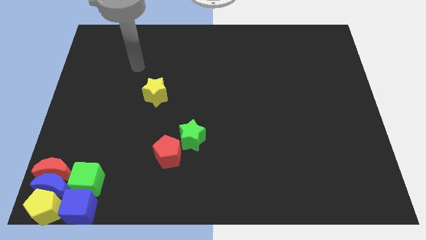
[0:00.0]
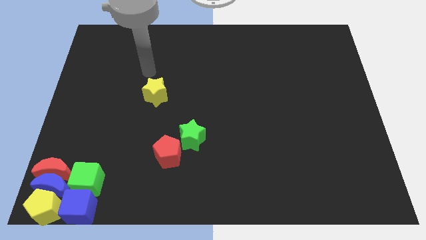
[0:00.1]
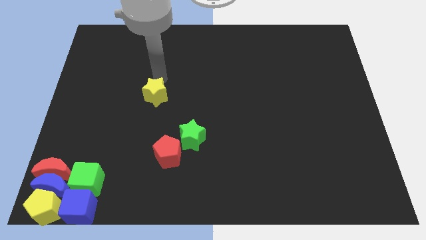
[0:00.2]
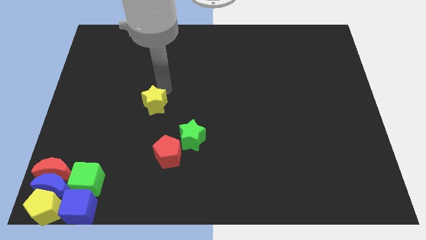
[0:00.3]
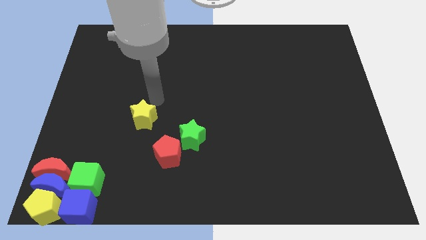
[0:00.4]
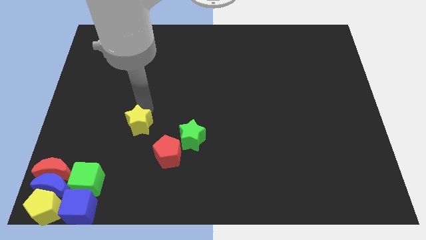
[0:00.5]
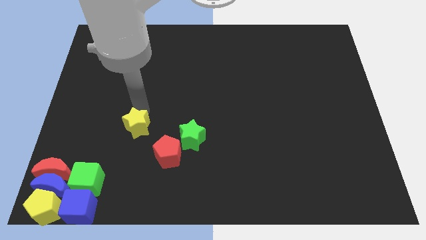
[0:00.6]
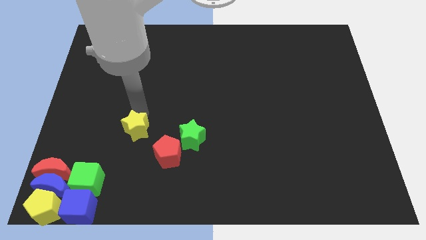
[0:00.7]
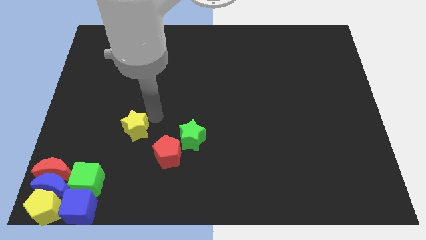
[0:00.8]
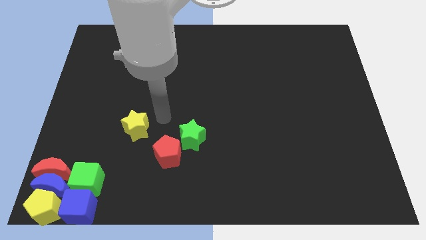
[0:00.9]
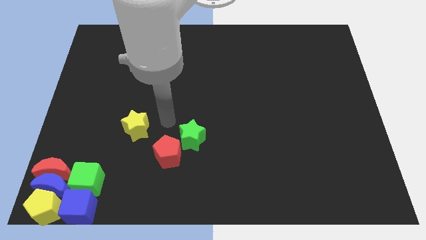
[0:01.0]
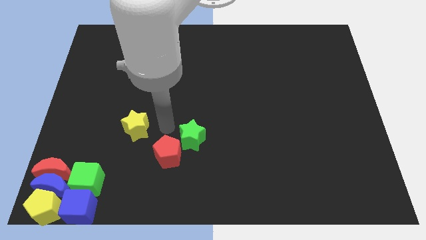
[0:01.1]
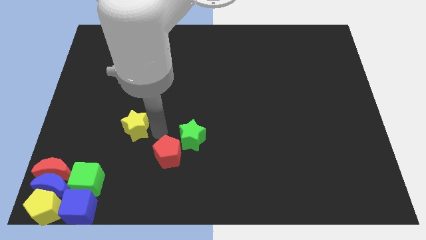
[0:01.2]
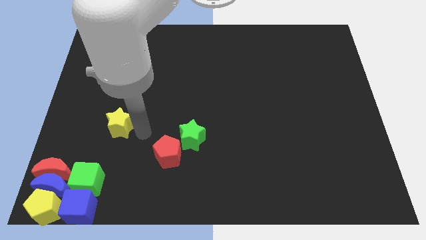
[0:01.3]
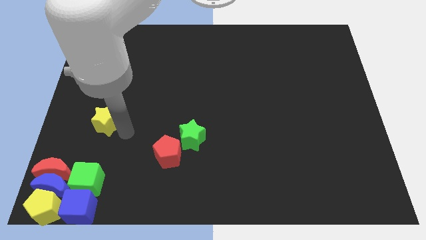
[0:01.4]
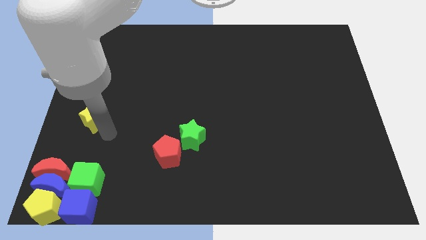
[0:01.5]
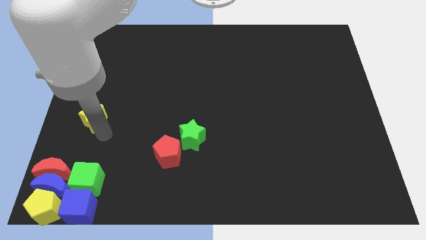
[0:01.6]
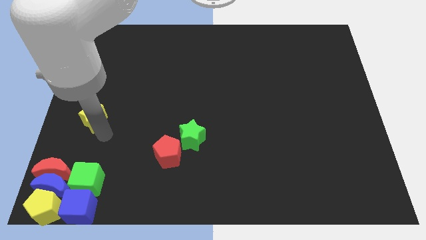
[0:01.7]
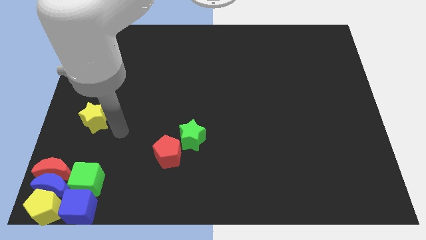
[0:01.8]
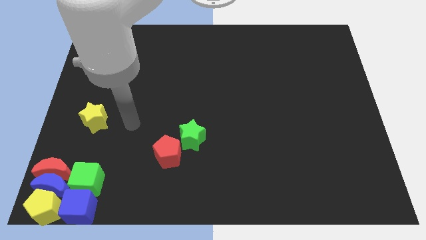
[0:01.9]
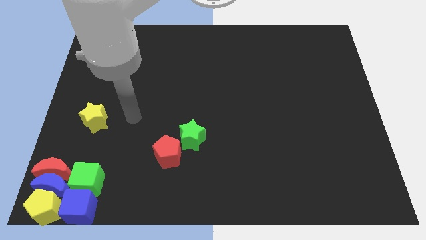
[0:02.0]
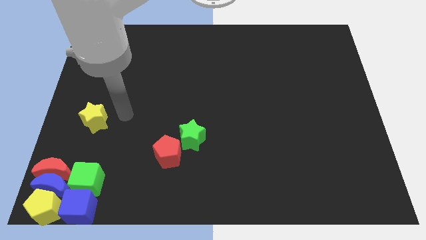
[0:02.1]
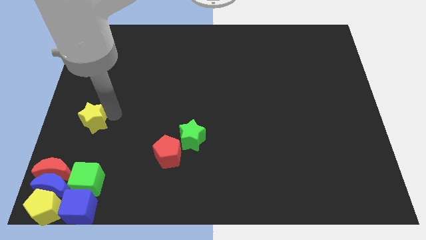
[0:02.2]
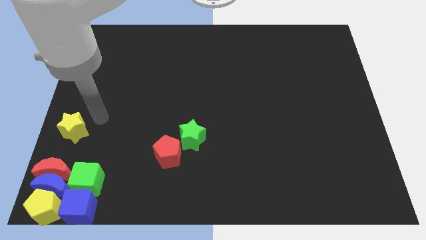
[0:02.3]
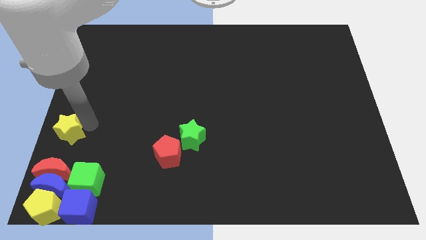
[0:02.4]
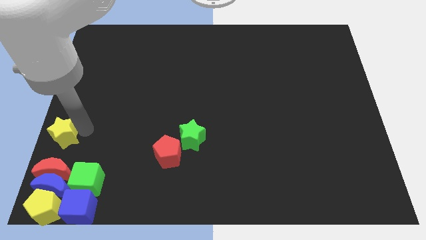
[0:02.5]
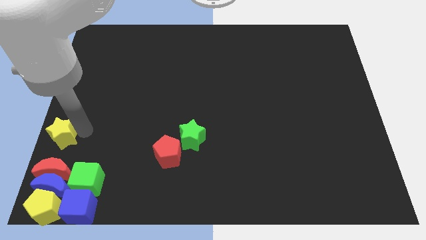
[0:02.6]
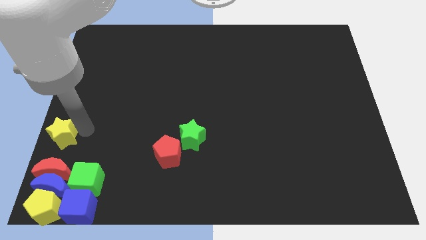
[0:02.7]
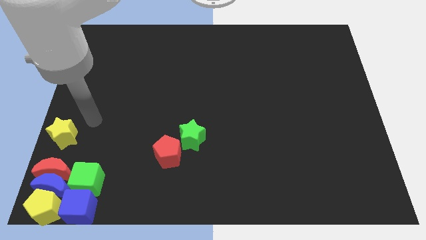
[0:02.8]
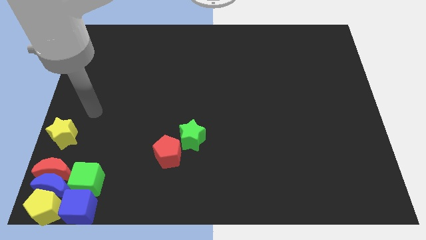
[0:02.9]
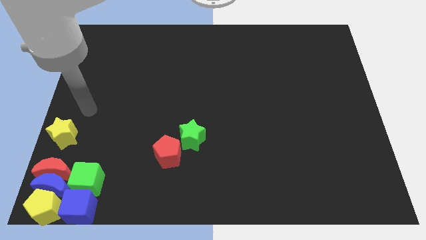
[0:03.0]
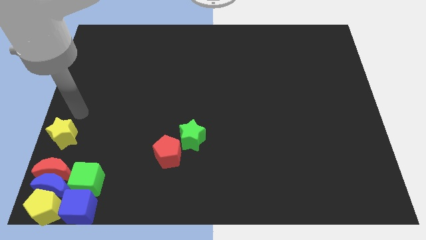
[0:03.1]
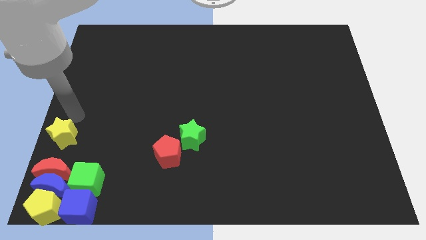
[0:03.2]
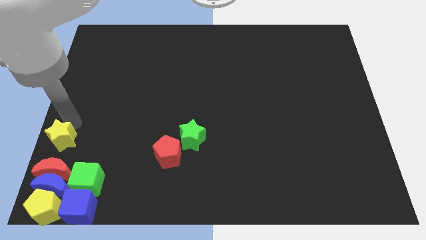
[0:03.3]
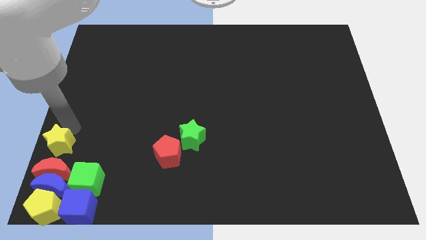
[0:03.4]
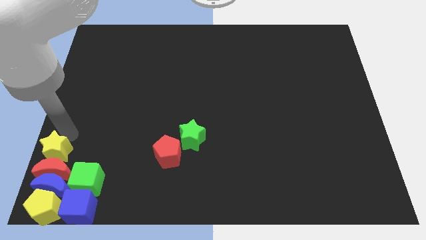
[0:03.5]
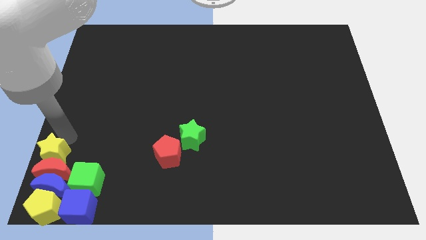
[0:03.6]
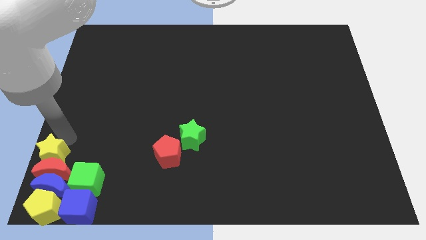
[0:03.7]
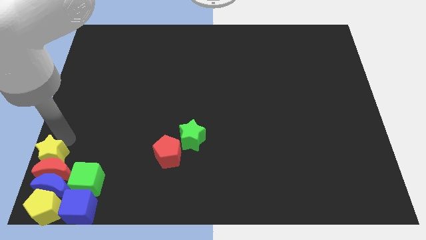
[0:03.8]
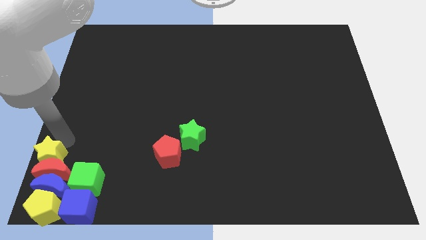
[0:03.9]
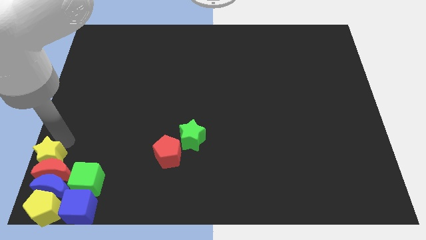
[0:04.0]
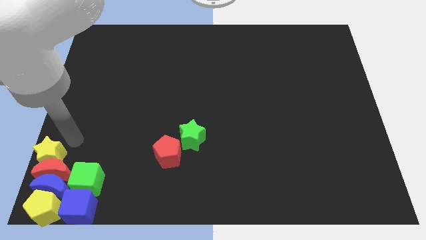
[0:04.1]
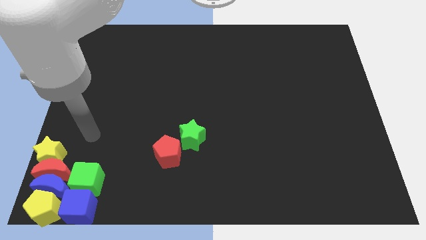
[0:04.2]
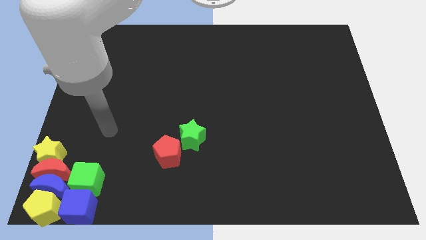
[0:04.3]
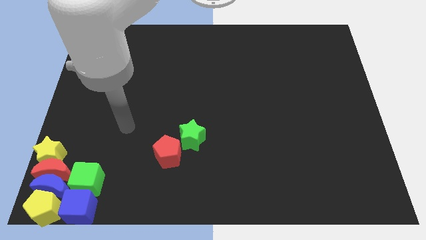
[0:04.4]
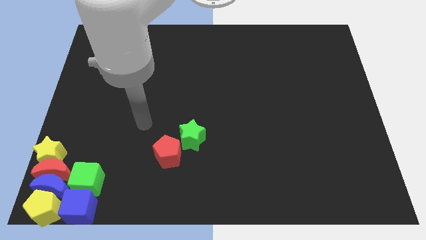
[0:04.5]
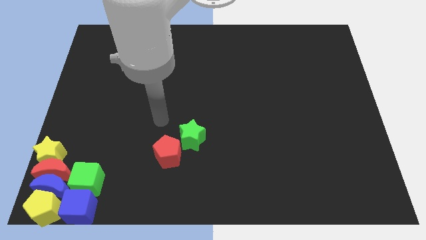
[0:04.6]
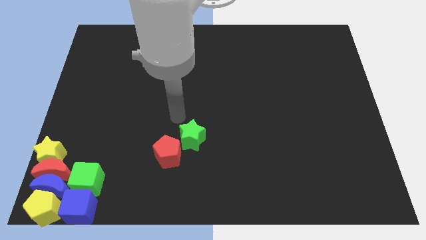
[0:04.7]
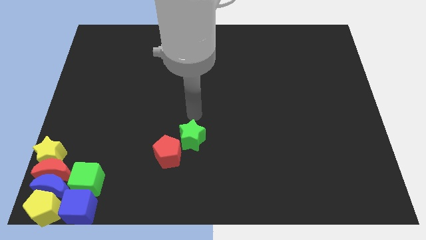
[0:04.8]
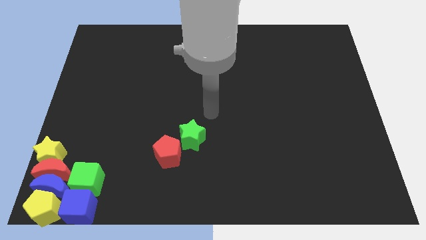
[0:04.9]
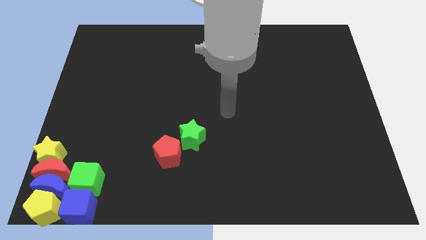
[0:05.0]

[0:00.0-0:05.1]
move yellow star above red moon

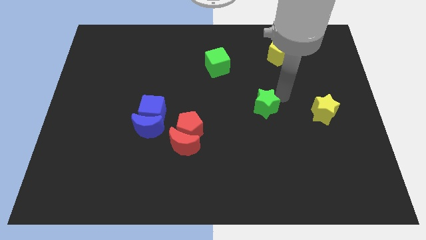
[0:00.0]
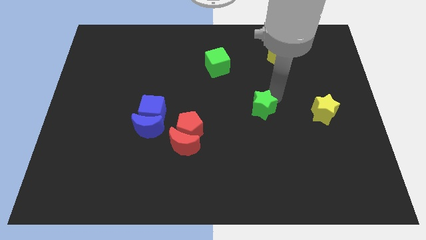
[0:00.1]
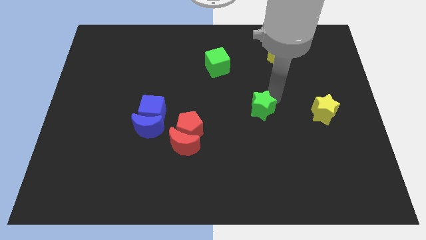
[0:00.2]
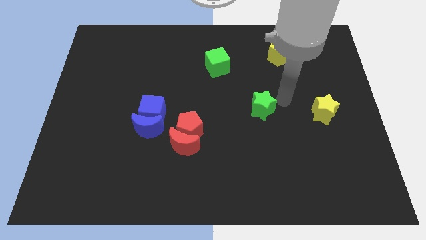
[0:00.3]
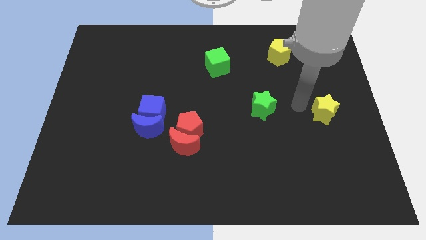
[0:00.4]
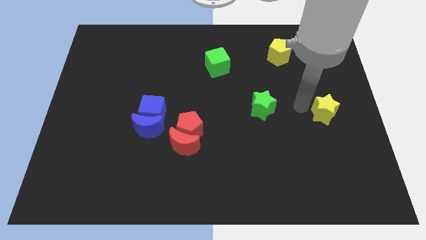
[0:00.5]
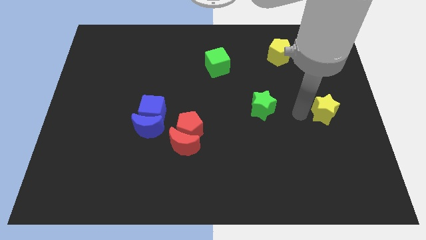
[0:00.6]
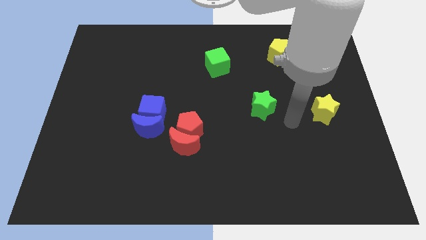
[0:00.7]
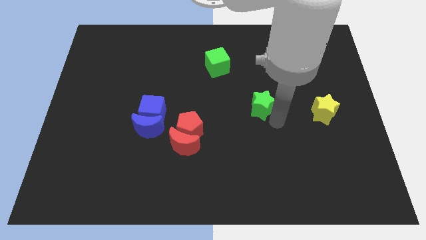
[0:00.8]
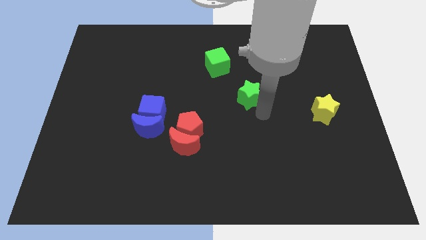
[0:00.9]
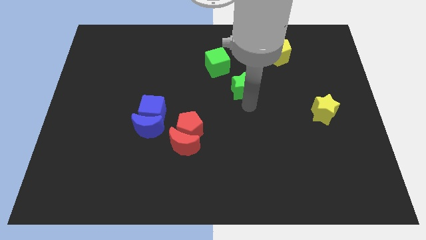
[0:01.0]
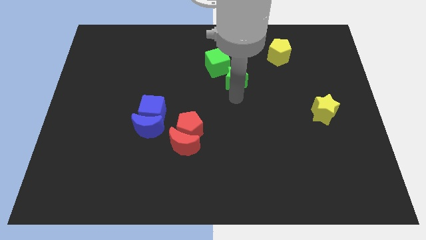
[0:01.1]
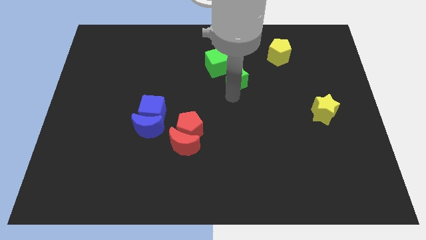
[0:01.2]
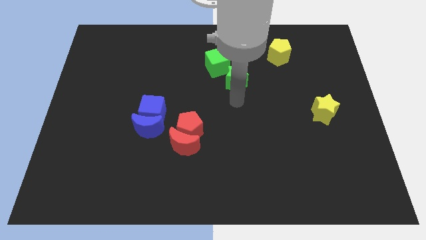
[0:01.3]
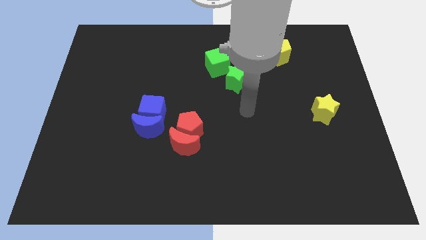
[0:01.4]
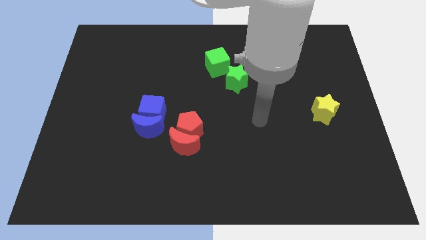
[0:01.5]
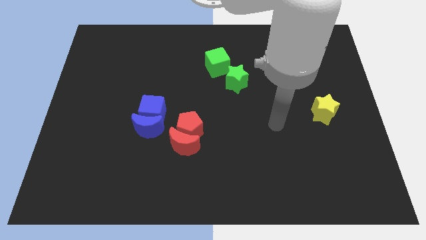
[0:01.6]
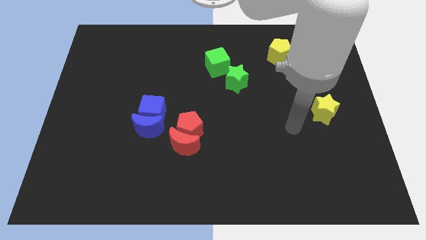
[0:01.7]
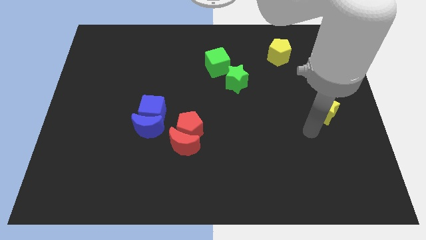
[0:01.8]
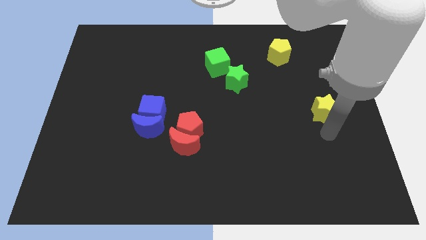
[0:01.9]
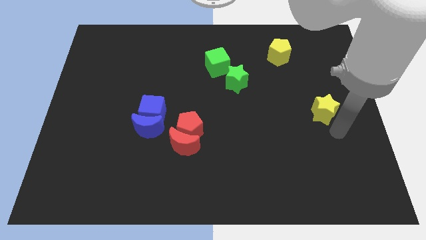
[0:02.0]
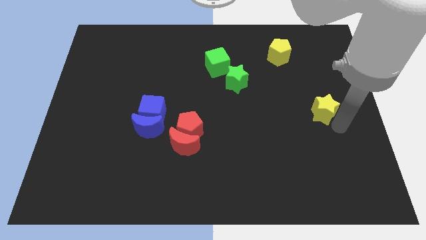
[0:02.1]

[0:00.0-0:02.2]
push green star into green cube

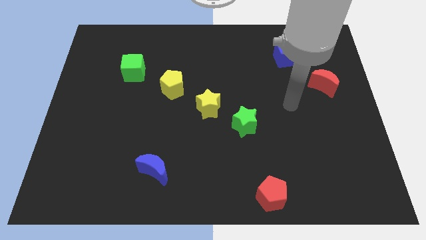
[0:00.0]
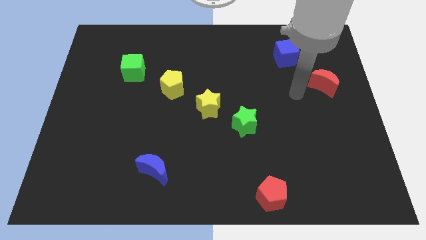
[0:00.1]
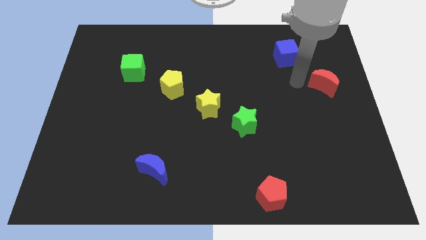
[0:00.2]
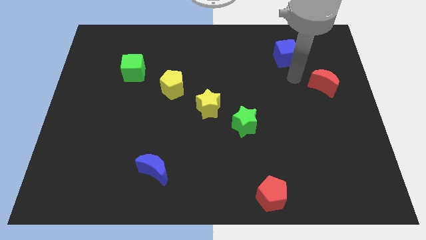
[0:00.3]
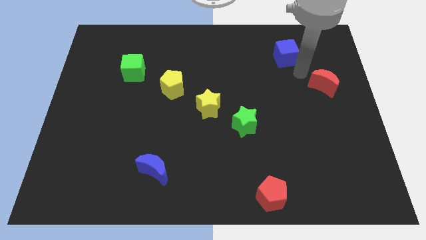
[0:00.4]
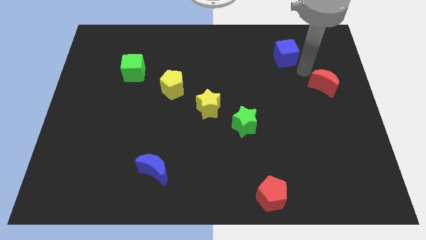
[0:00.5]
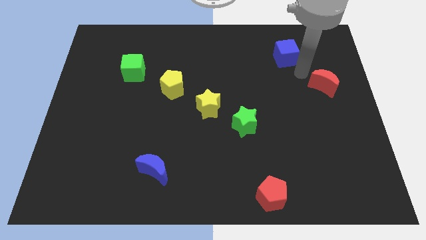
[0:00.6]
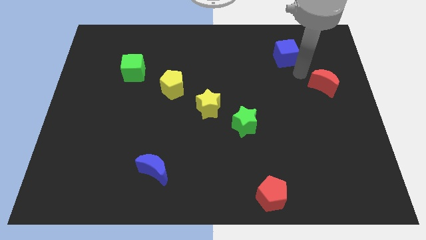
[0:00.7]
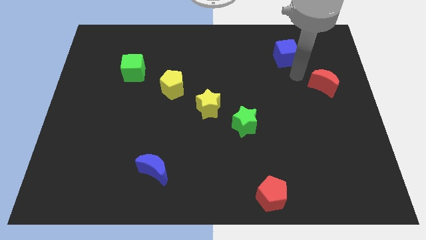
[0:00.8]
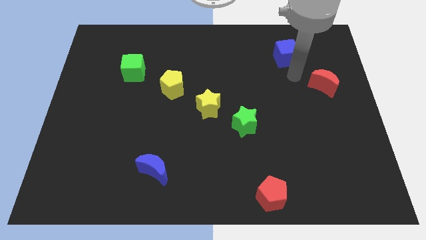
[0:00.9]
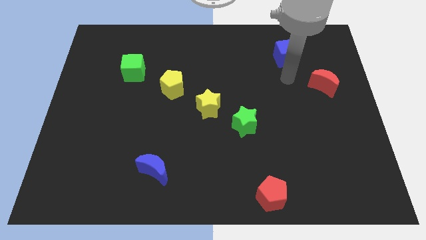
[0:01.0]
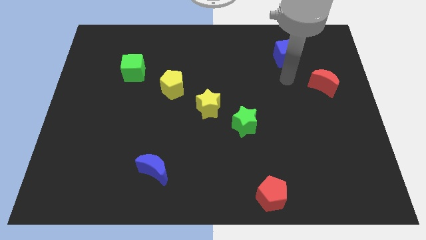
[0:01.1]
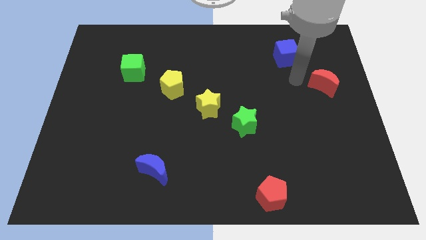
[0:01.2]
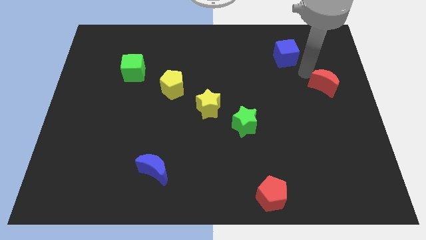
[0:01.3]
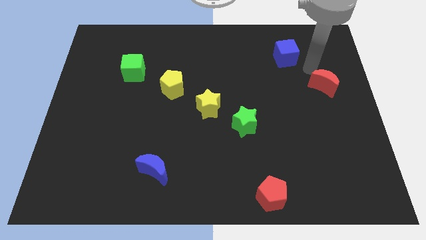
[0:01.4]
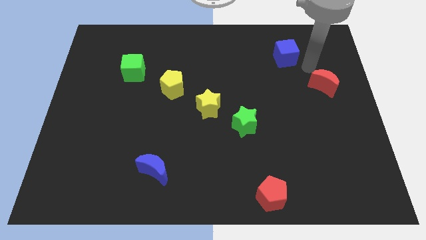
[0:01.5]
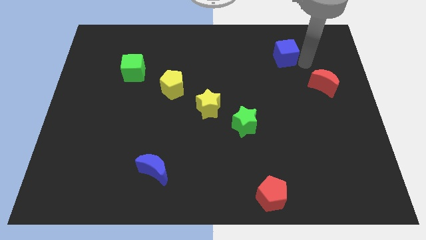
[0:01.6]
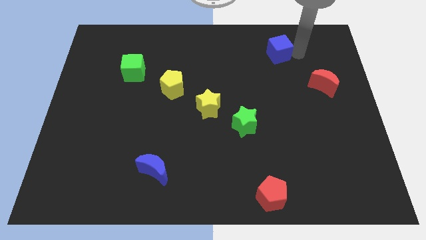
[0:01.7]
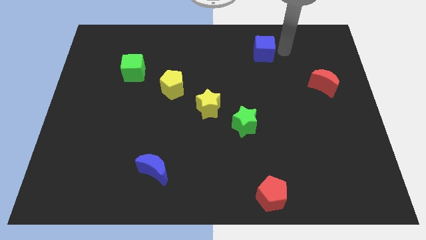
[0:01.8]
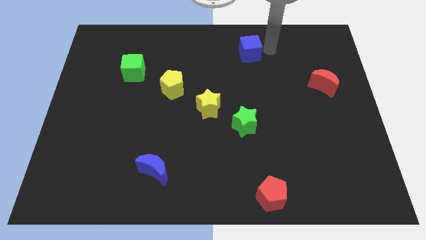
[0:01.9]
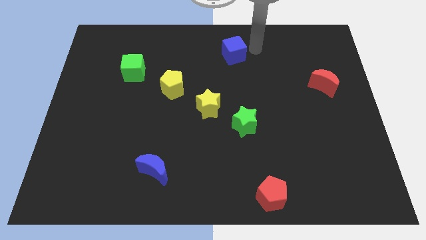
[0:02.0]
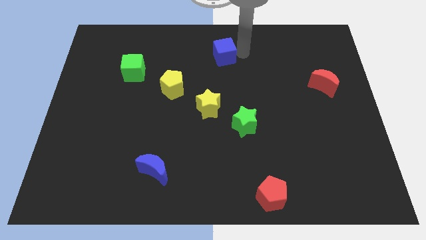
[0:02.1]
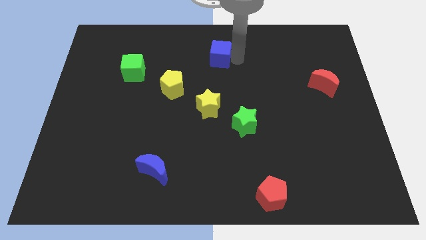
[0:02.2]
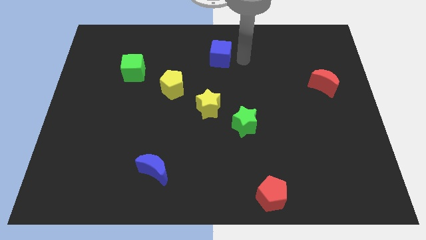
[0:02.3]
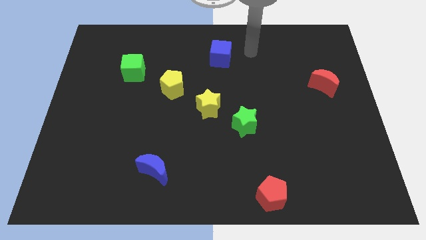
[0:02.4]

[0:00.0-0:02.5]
slide the blue cube slightly to the left
